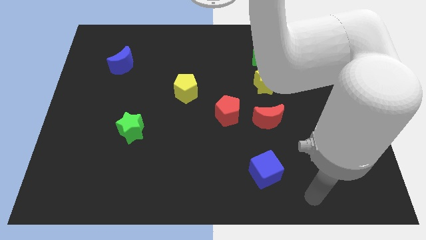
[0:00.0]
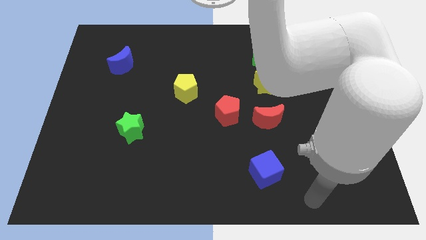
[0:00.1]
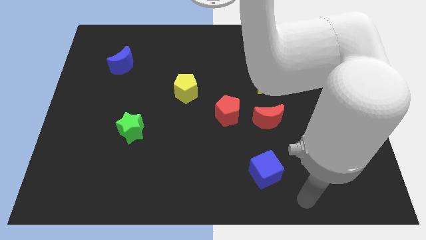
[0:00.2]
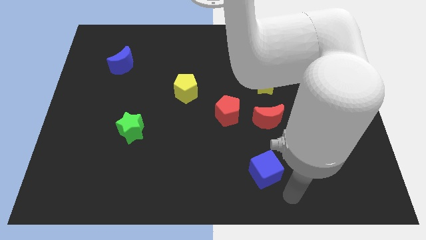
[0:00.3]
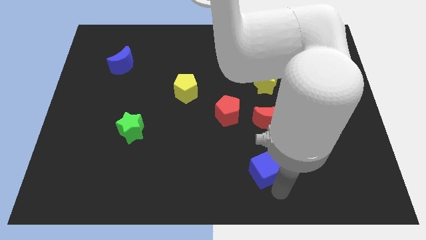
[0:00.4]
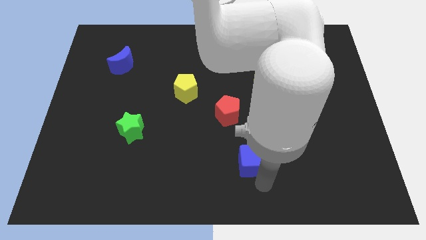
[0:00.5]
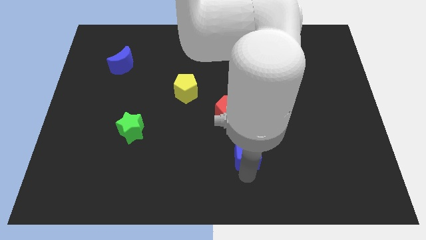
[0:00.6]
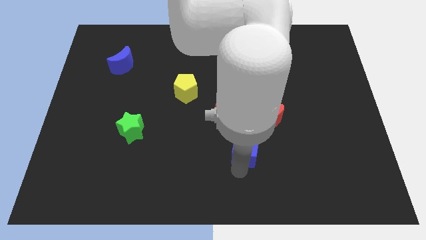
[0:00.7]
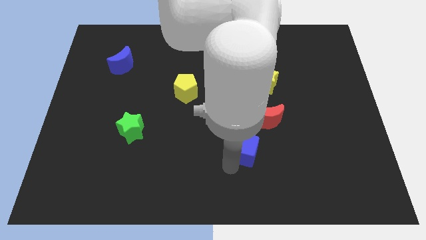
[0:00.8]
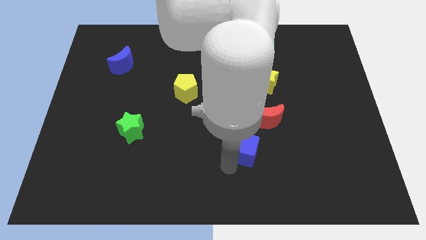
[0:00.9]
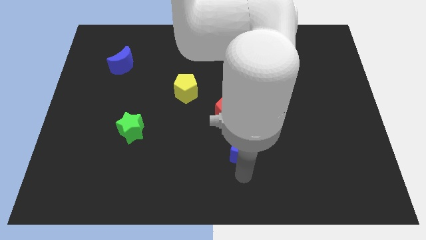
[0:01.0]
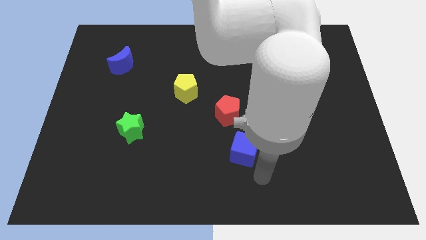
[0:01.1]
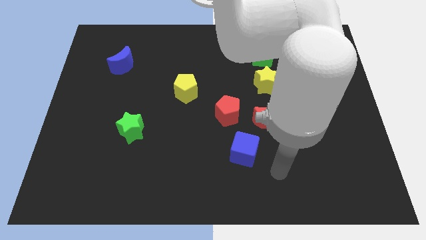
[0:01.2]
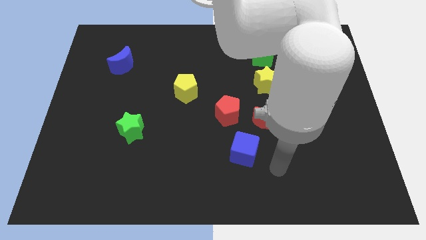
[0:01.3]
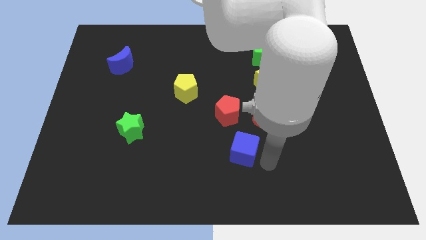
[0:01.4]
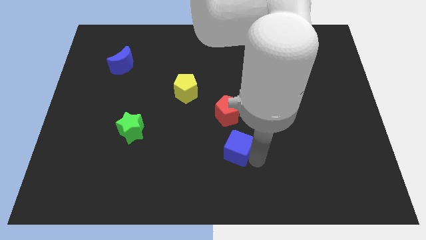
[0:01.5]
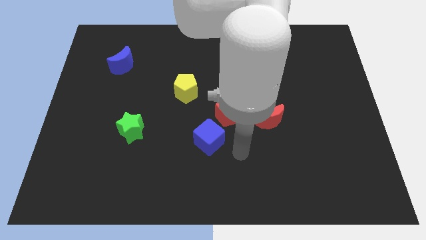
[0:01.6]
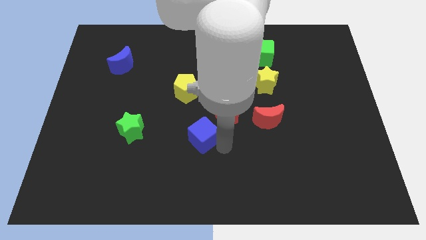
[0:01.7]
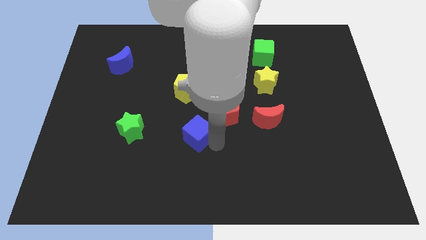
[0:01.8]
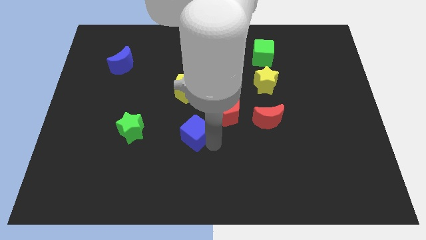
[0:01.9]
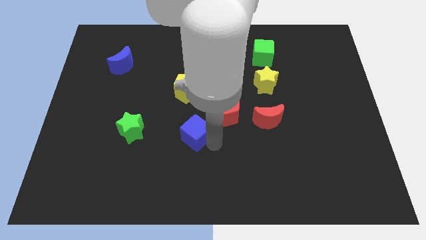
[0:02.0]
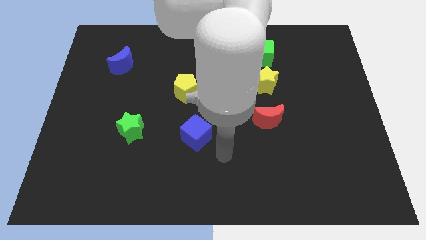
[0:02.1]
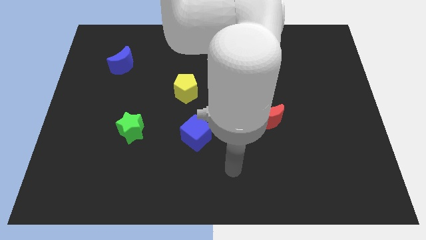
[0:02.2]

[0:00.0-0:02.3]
move the blue cube to the horizontal right of the green star

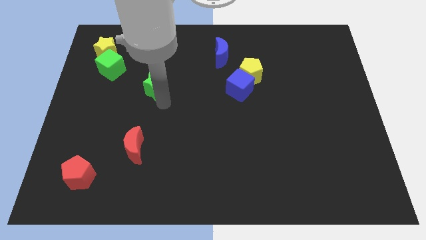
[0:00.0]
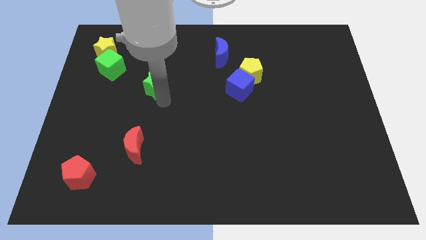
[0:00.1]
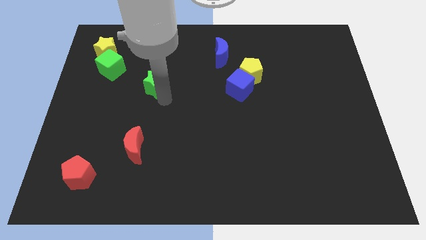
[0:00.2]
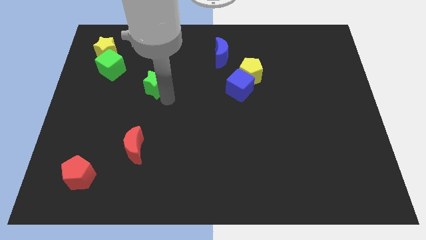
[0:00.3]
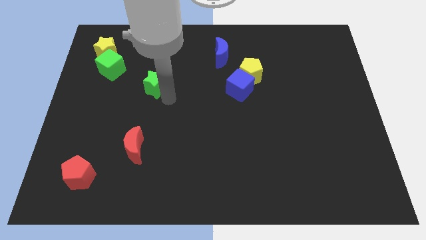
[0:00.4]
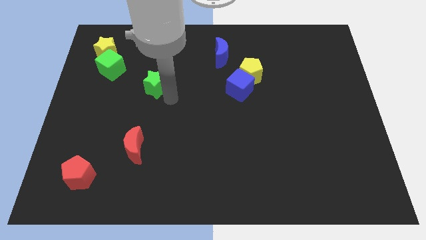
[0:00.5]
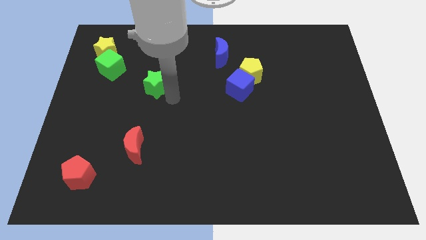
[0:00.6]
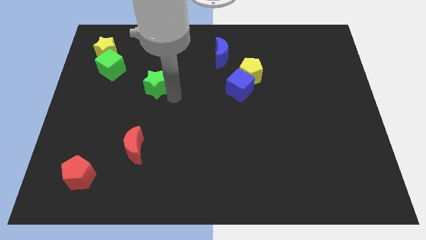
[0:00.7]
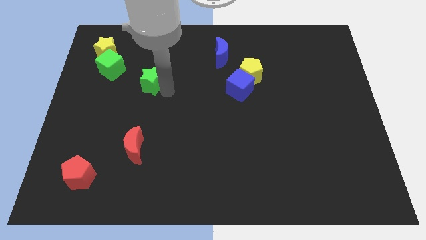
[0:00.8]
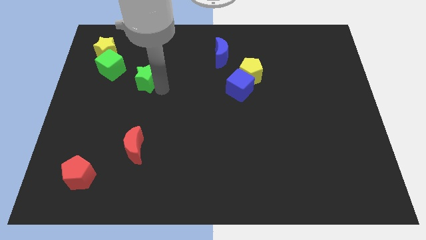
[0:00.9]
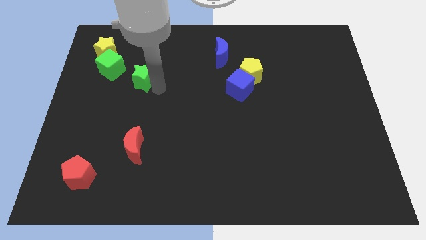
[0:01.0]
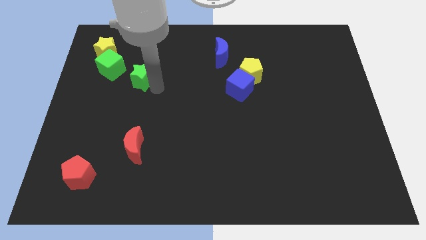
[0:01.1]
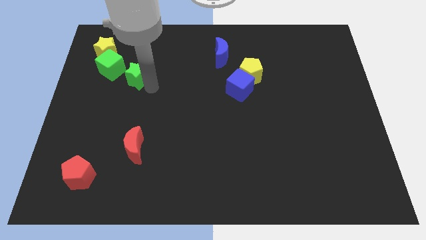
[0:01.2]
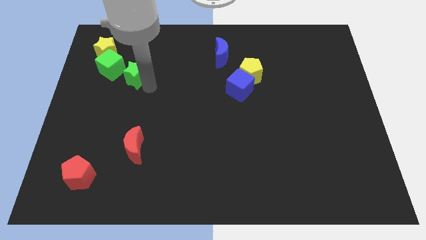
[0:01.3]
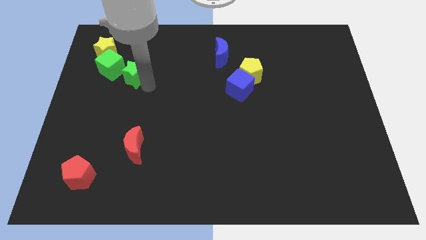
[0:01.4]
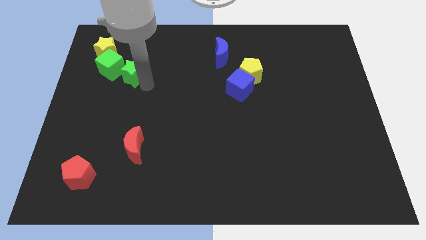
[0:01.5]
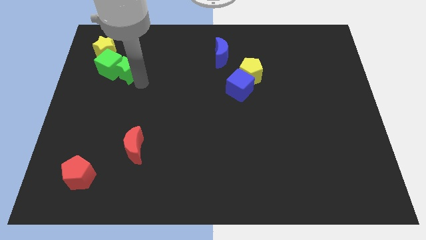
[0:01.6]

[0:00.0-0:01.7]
push the green star into the green cube

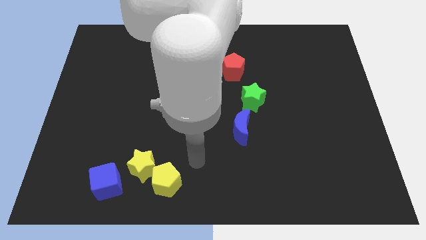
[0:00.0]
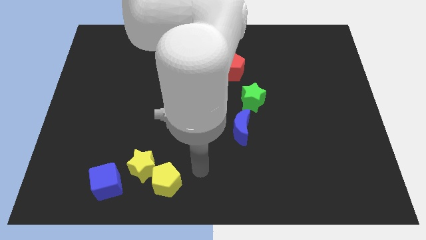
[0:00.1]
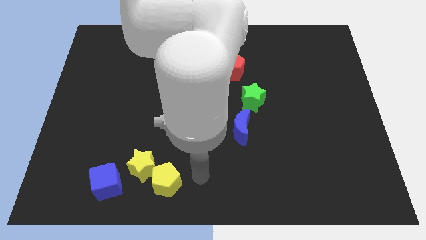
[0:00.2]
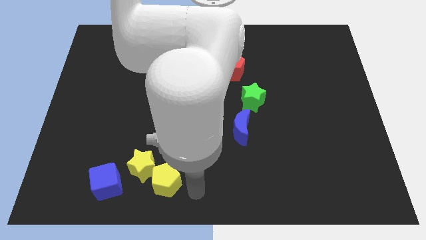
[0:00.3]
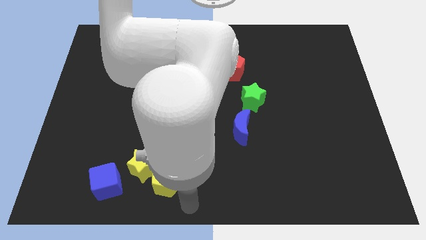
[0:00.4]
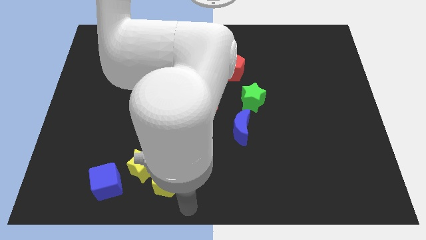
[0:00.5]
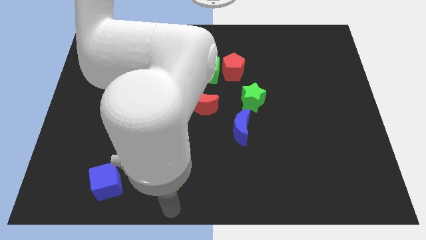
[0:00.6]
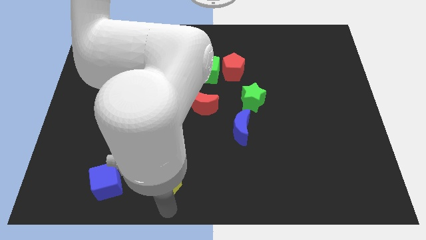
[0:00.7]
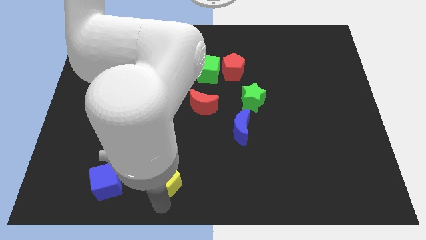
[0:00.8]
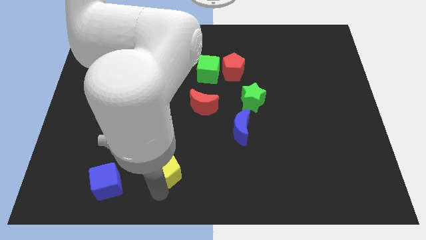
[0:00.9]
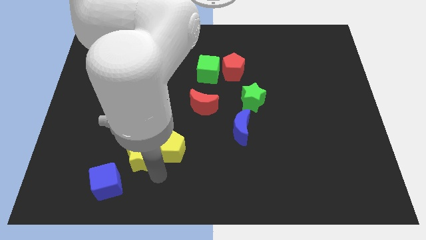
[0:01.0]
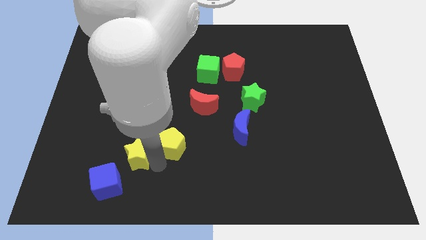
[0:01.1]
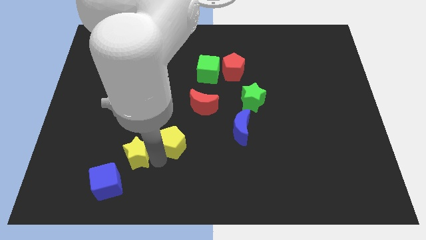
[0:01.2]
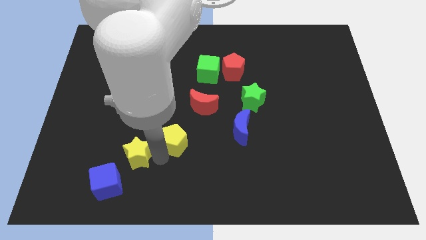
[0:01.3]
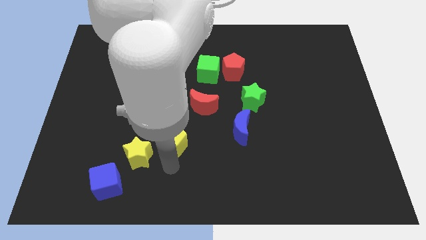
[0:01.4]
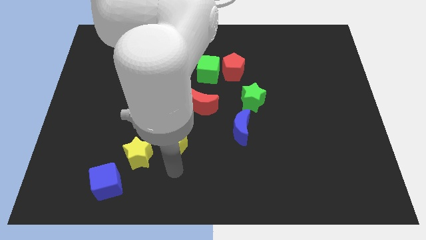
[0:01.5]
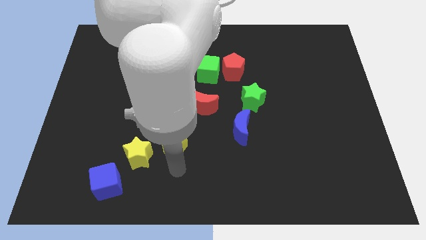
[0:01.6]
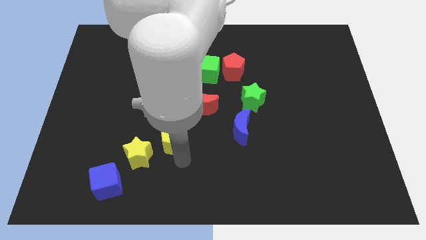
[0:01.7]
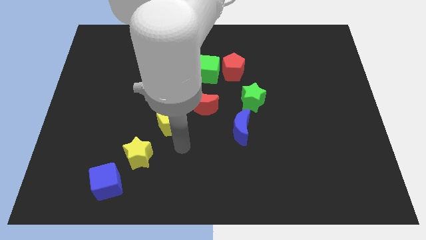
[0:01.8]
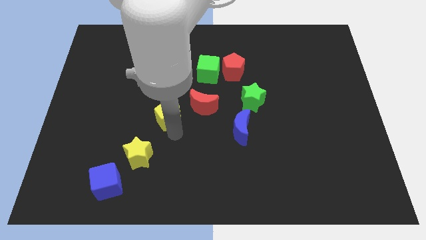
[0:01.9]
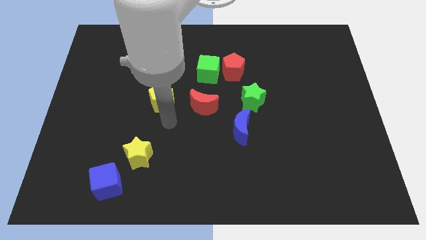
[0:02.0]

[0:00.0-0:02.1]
separate the yellow pentagon from the yellow star

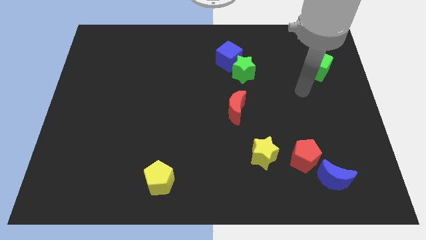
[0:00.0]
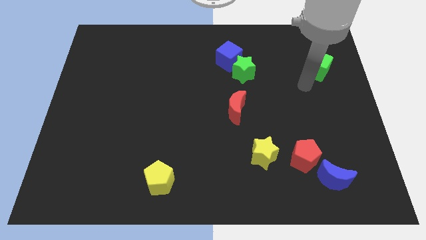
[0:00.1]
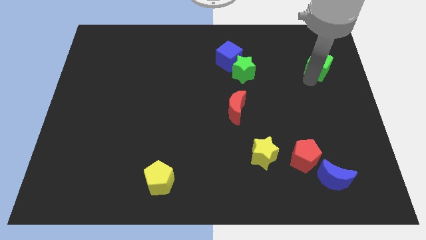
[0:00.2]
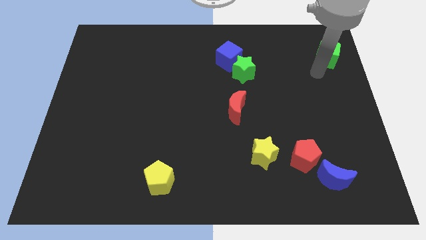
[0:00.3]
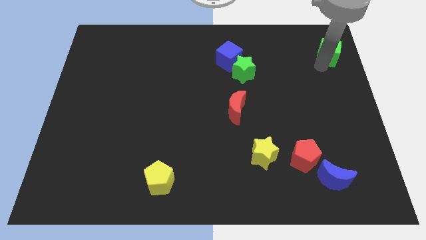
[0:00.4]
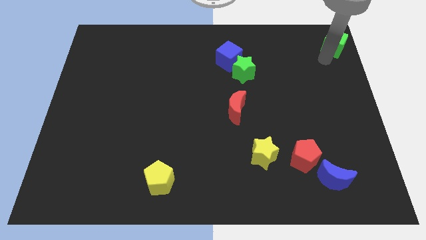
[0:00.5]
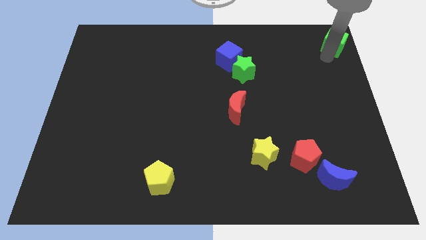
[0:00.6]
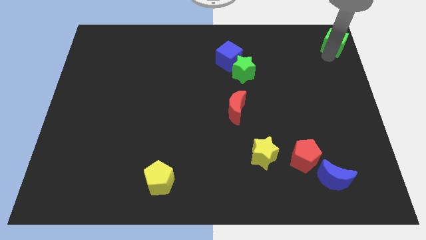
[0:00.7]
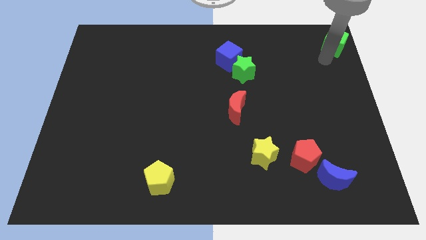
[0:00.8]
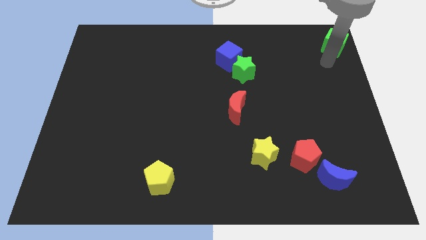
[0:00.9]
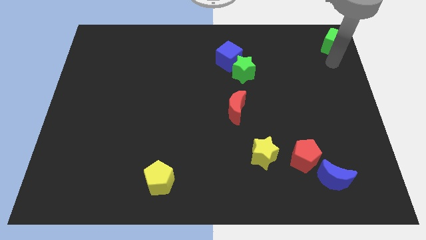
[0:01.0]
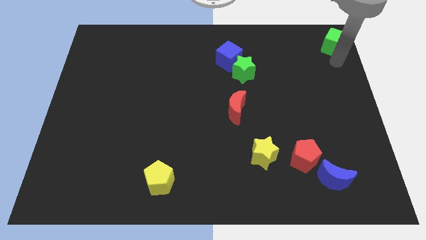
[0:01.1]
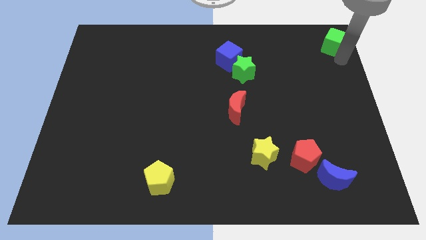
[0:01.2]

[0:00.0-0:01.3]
slide the green cube towards the top right side of the board

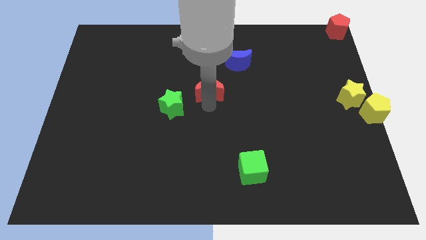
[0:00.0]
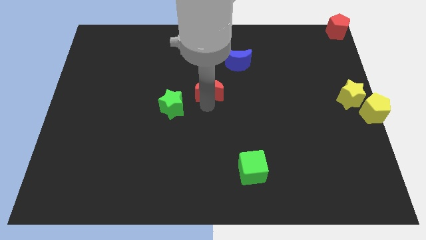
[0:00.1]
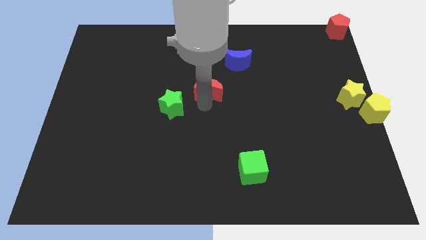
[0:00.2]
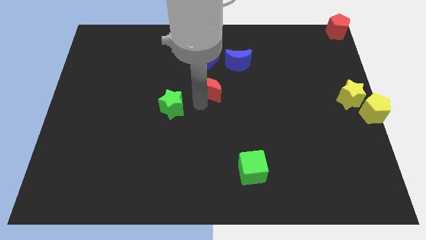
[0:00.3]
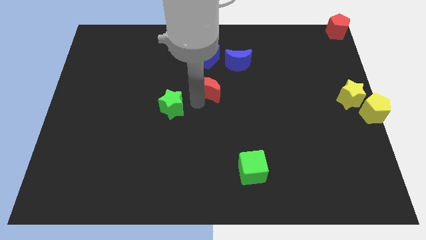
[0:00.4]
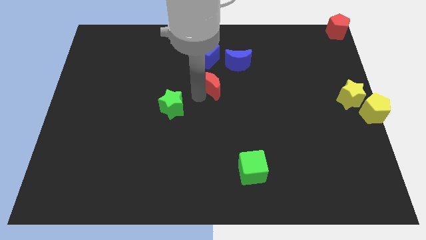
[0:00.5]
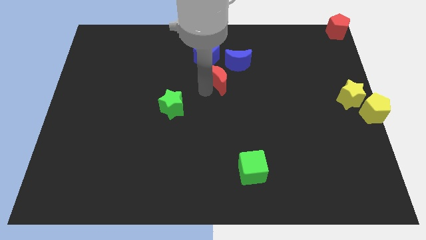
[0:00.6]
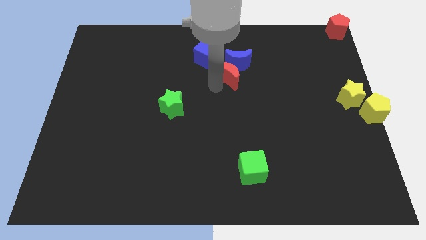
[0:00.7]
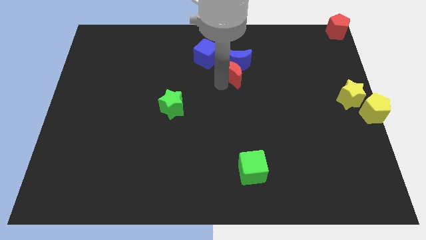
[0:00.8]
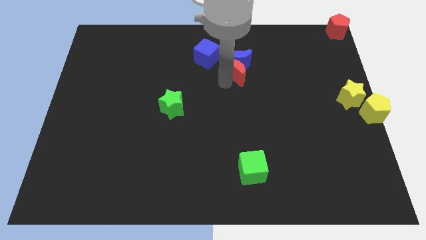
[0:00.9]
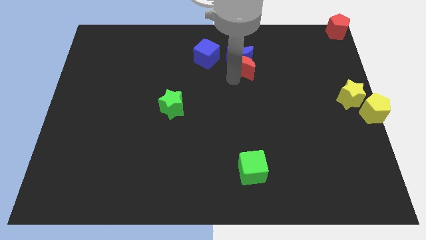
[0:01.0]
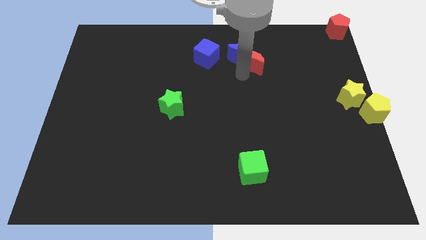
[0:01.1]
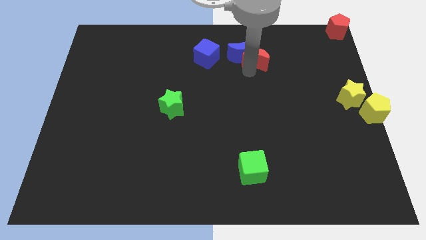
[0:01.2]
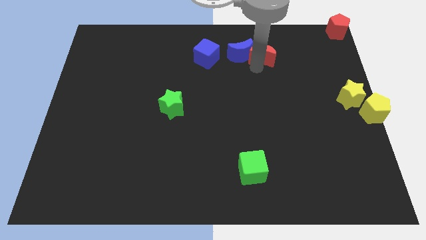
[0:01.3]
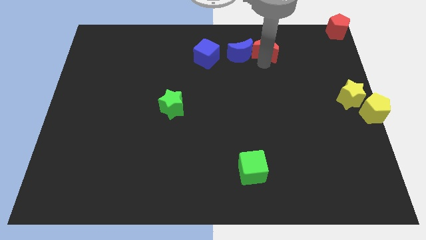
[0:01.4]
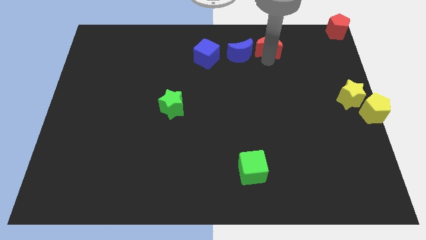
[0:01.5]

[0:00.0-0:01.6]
move the red moon to the right side of the blue moon
